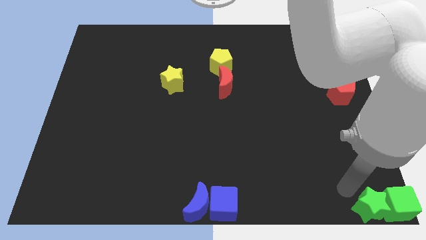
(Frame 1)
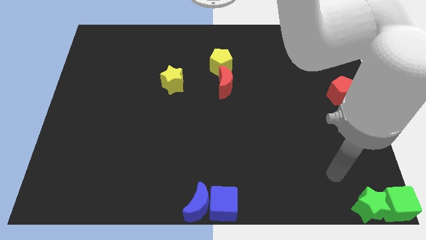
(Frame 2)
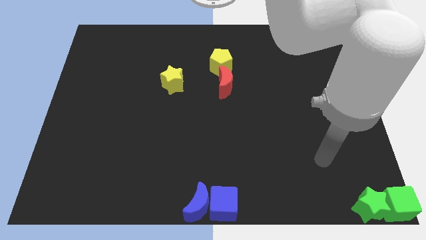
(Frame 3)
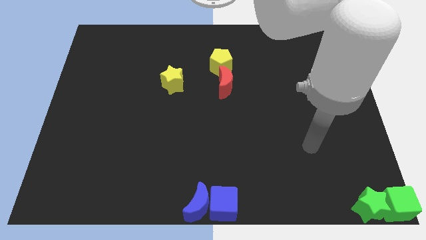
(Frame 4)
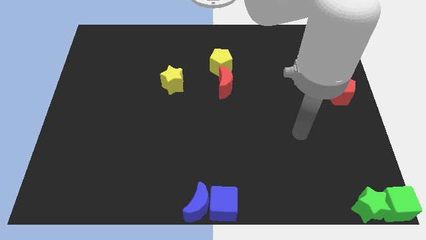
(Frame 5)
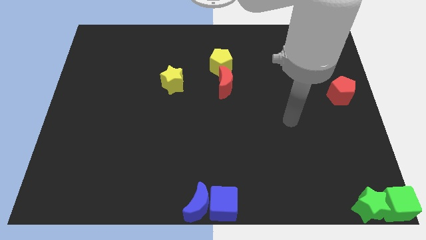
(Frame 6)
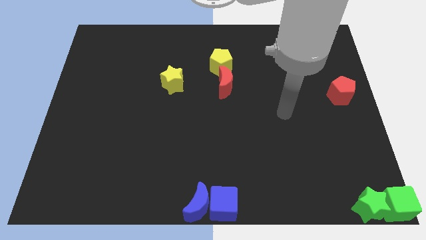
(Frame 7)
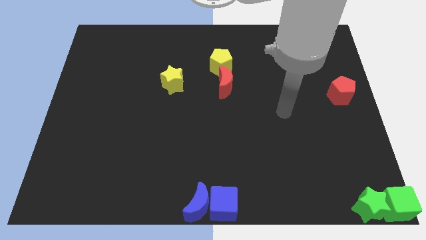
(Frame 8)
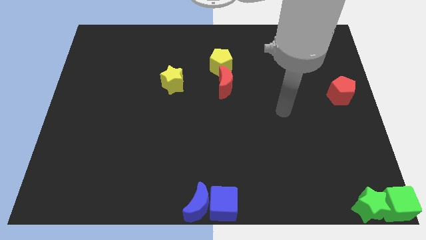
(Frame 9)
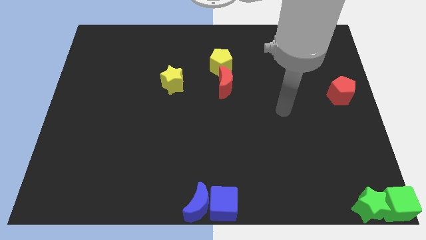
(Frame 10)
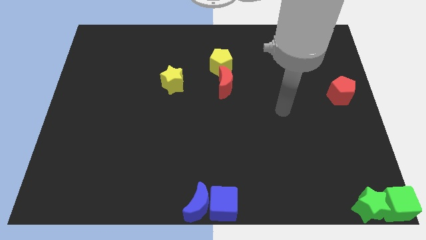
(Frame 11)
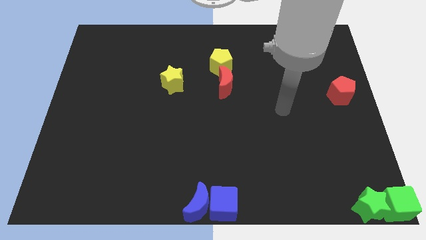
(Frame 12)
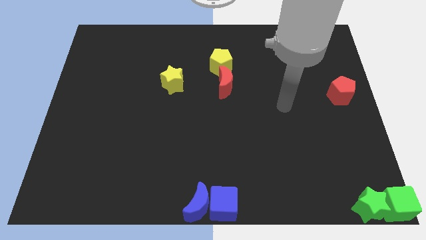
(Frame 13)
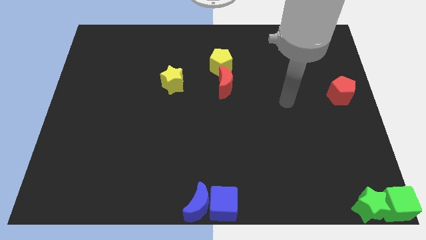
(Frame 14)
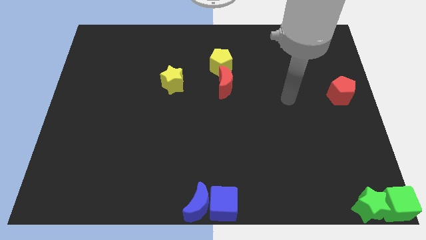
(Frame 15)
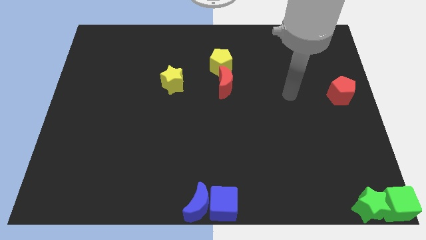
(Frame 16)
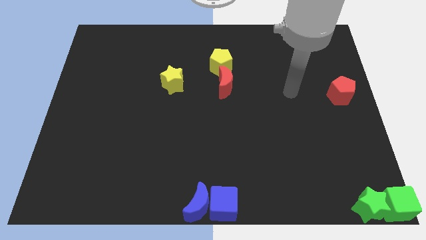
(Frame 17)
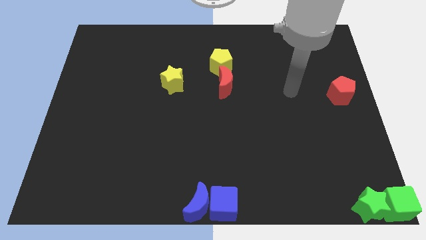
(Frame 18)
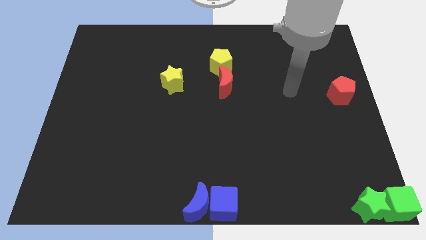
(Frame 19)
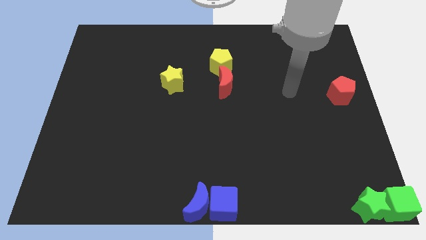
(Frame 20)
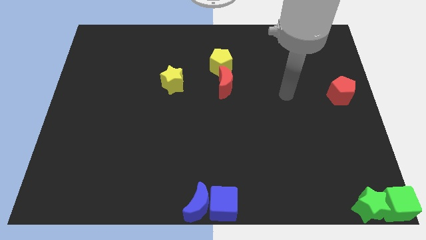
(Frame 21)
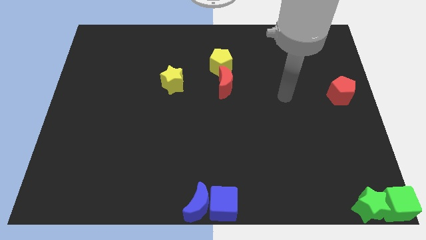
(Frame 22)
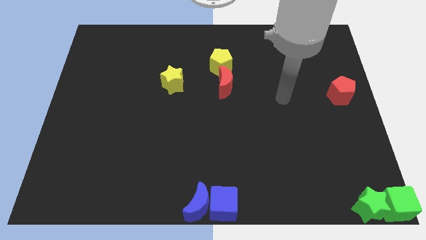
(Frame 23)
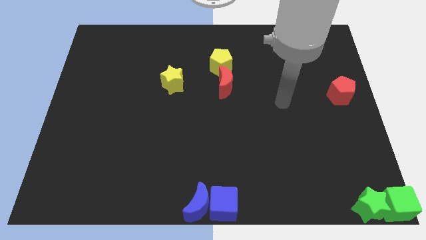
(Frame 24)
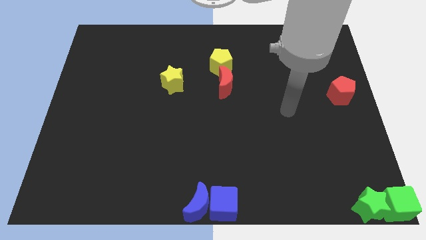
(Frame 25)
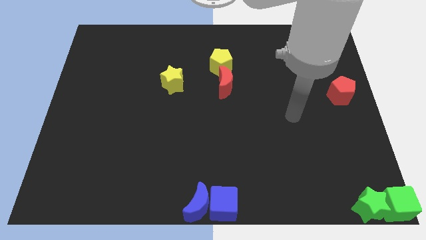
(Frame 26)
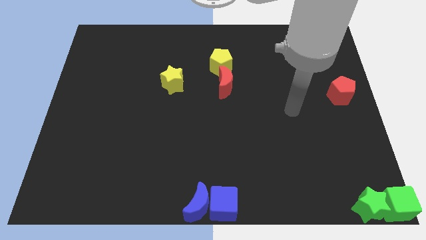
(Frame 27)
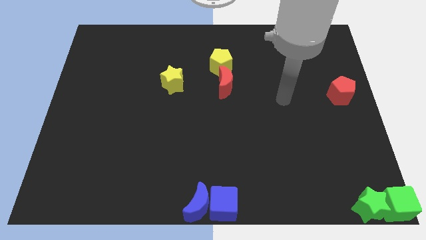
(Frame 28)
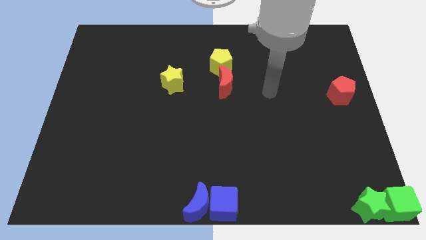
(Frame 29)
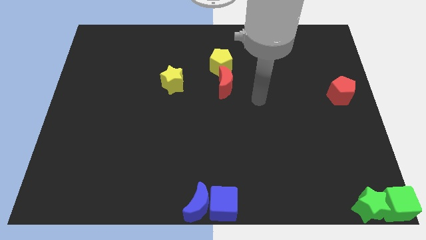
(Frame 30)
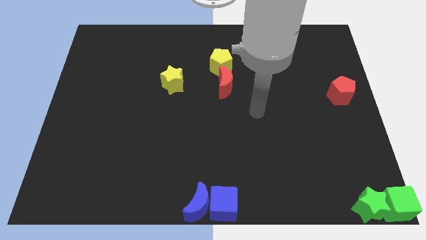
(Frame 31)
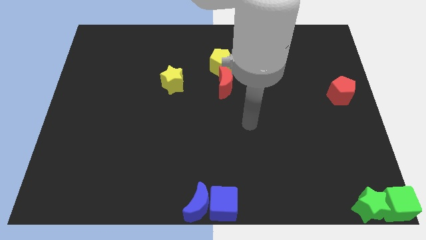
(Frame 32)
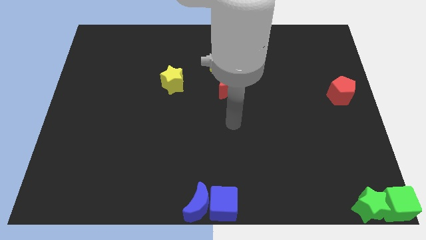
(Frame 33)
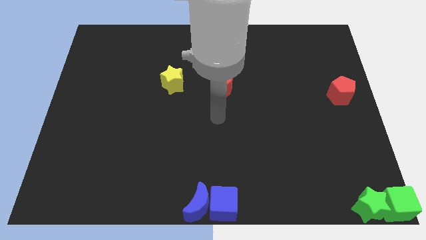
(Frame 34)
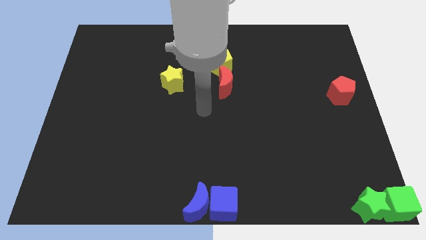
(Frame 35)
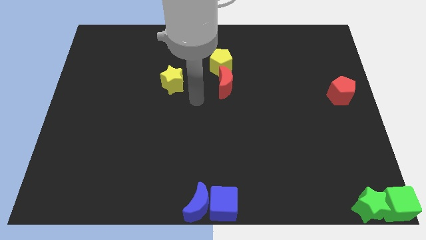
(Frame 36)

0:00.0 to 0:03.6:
move your arm away from the green star

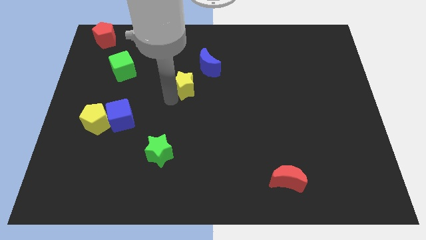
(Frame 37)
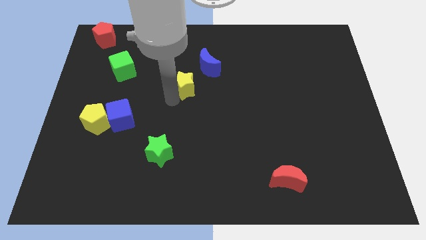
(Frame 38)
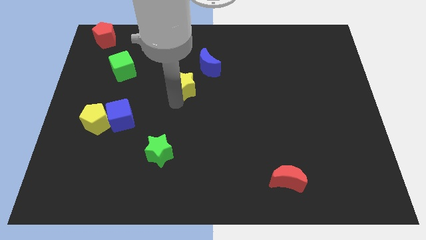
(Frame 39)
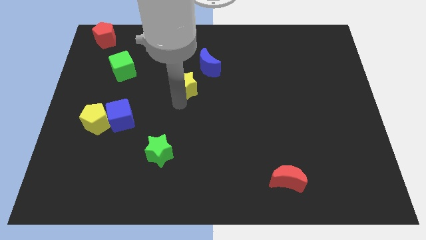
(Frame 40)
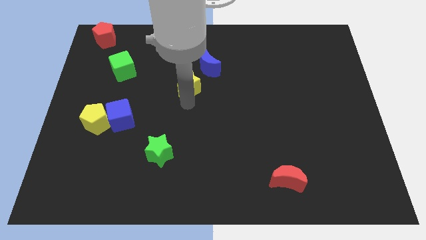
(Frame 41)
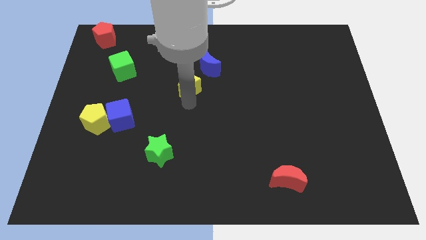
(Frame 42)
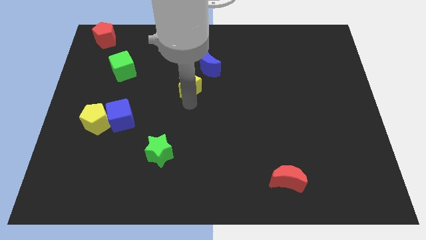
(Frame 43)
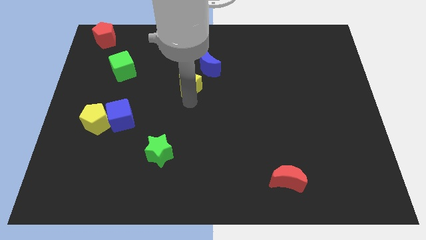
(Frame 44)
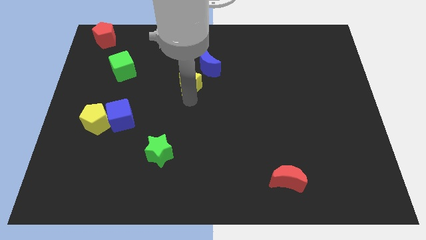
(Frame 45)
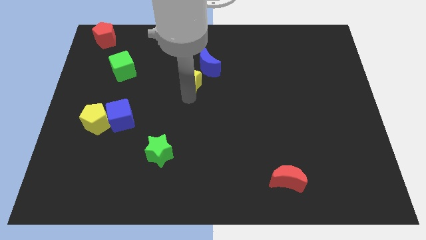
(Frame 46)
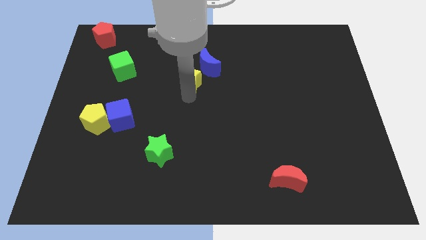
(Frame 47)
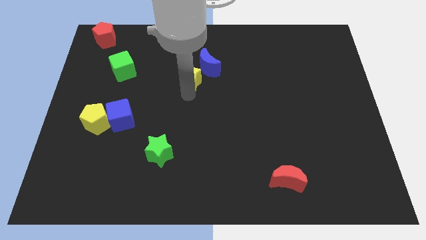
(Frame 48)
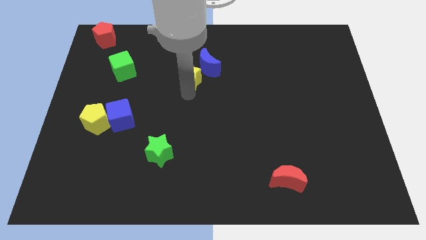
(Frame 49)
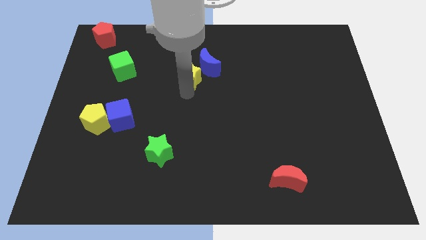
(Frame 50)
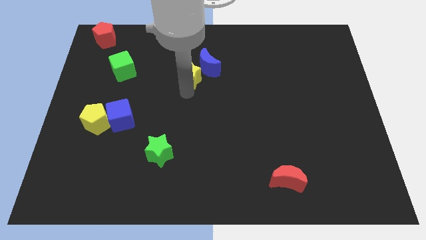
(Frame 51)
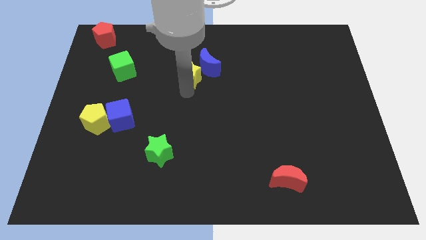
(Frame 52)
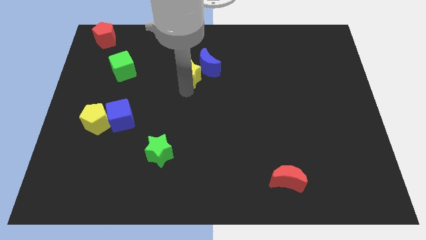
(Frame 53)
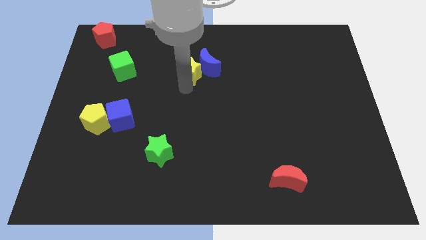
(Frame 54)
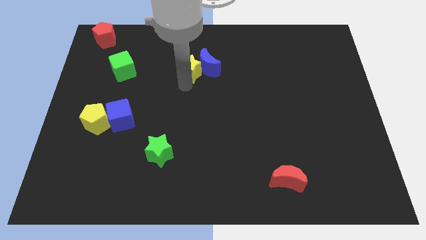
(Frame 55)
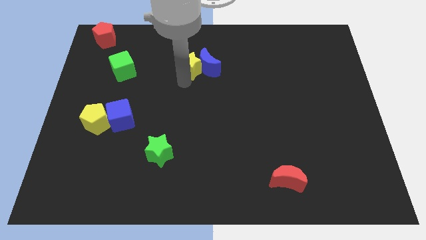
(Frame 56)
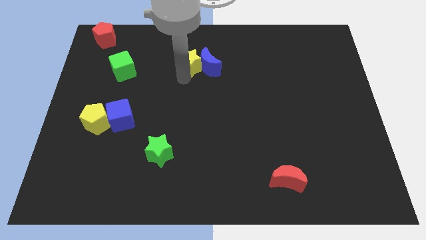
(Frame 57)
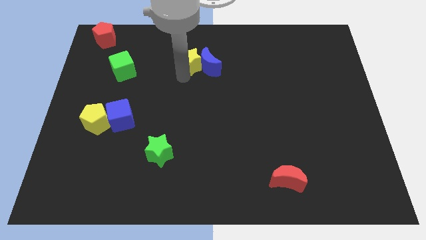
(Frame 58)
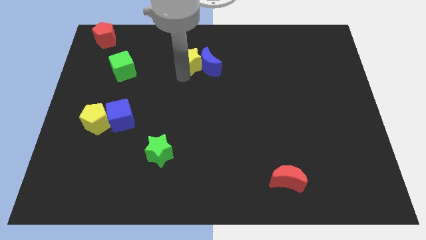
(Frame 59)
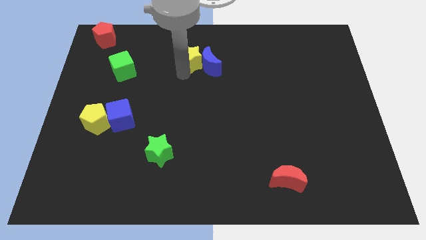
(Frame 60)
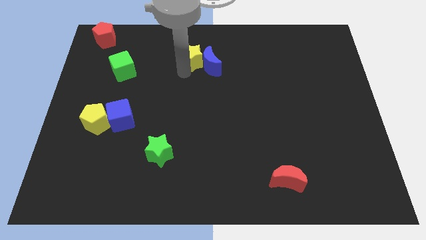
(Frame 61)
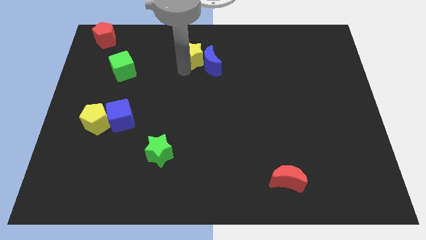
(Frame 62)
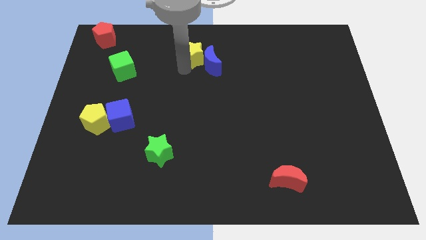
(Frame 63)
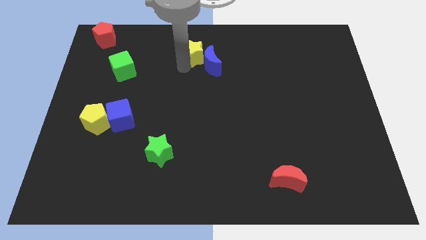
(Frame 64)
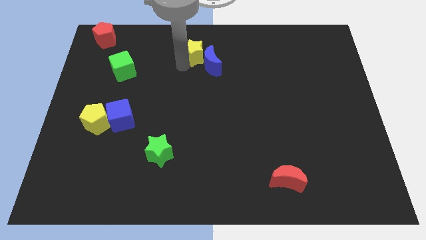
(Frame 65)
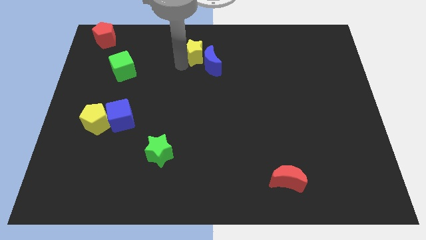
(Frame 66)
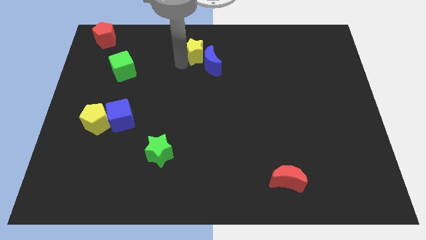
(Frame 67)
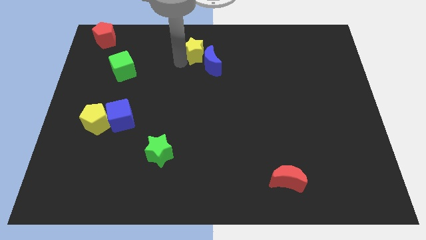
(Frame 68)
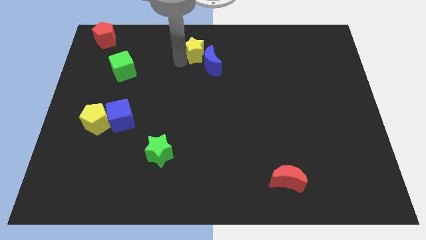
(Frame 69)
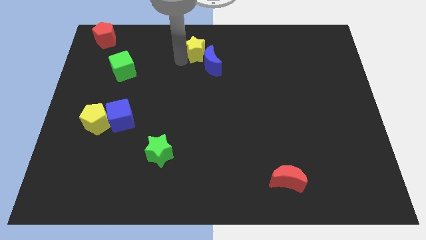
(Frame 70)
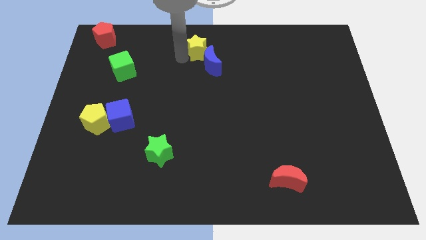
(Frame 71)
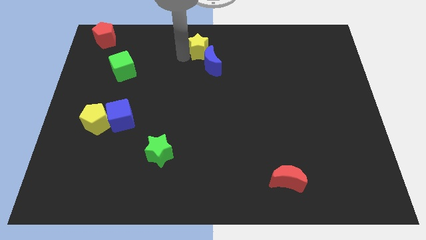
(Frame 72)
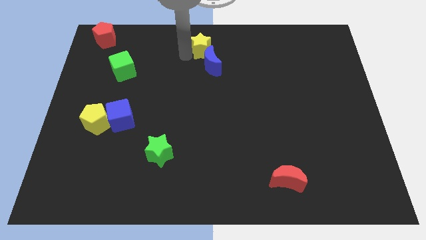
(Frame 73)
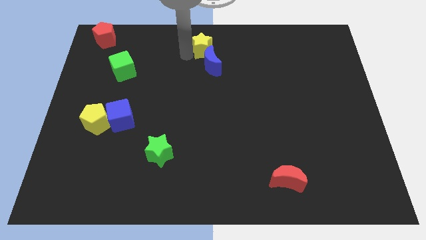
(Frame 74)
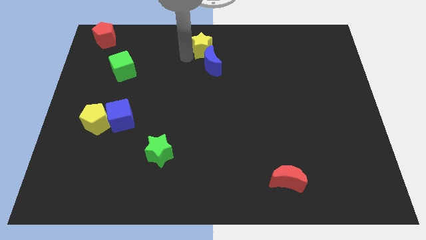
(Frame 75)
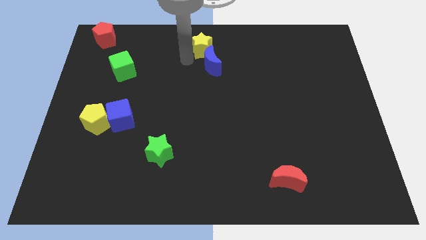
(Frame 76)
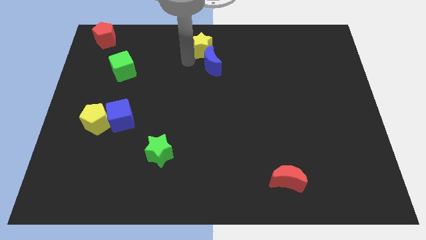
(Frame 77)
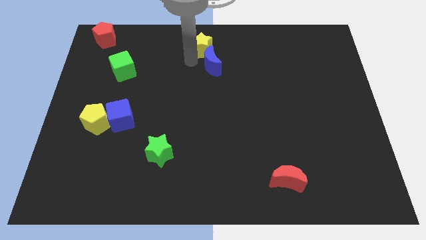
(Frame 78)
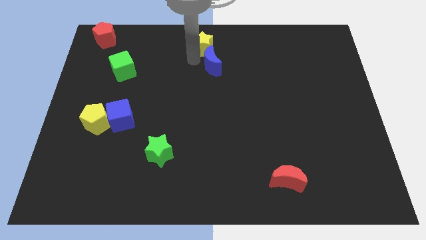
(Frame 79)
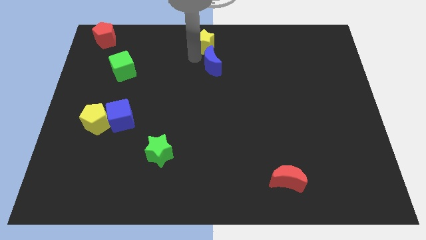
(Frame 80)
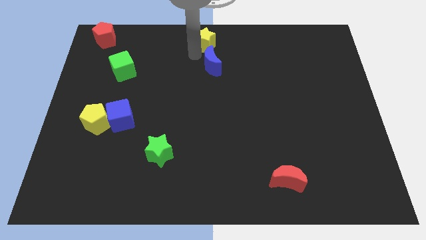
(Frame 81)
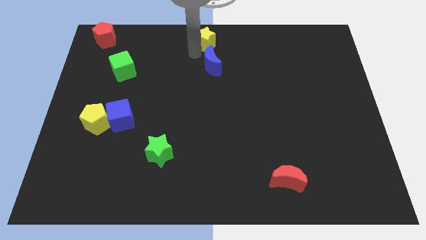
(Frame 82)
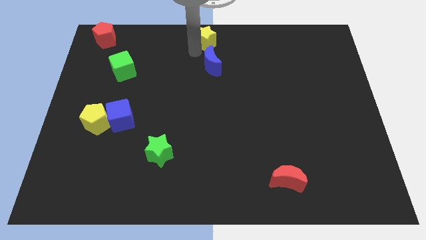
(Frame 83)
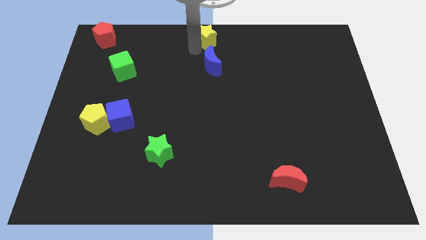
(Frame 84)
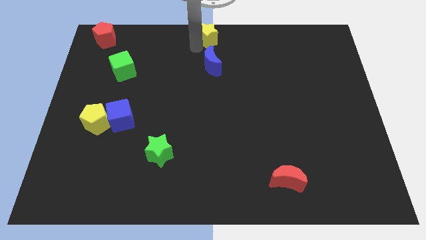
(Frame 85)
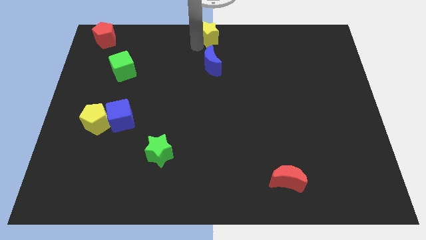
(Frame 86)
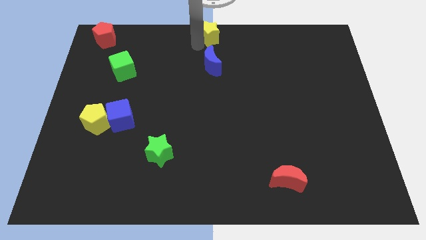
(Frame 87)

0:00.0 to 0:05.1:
place the yellow star above the blue moon
